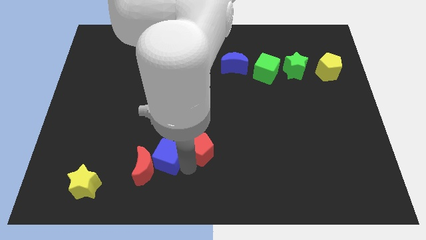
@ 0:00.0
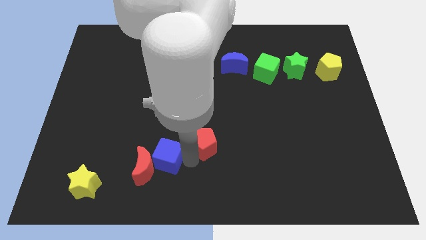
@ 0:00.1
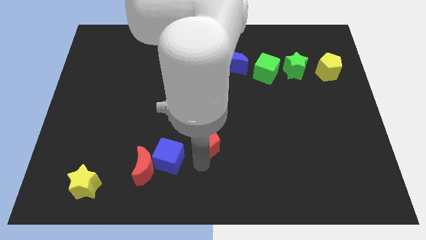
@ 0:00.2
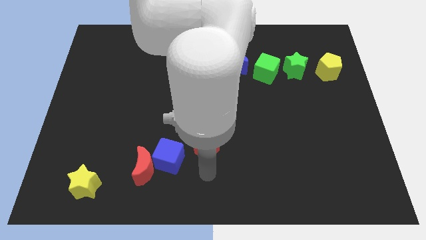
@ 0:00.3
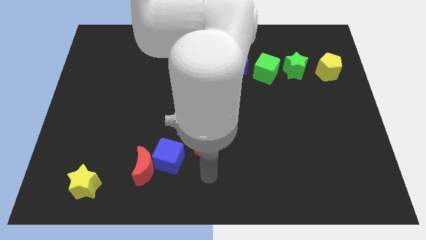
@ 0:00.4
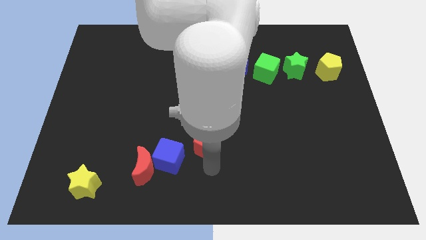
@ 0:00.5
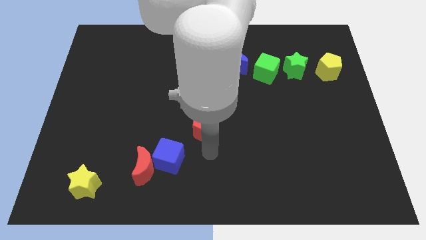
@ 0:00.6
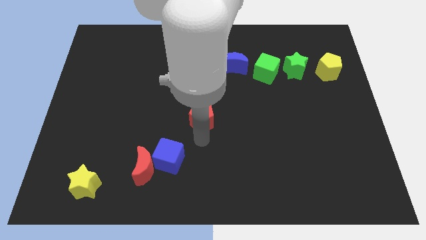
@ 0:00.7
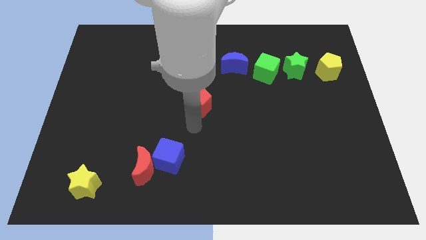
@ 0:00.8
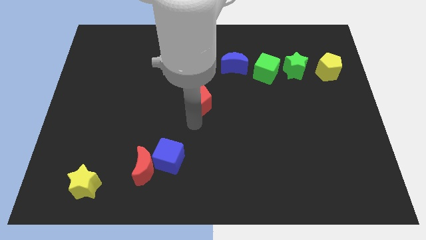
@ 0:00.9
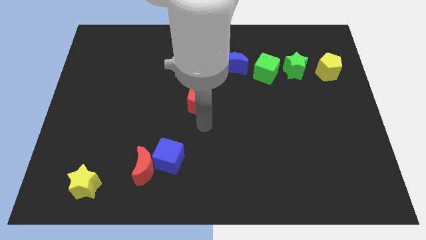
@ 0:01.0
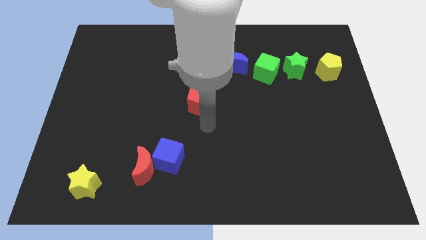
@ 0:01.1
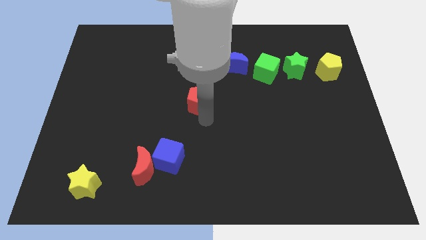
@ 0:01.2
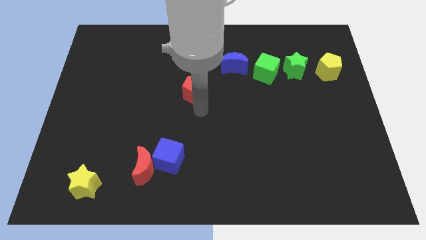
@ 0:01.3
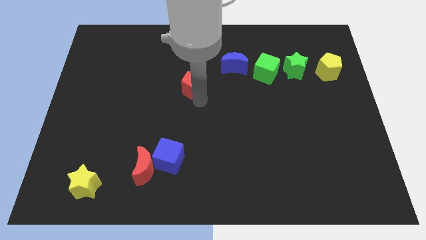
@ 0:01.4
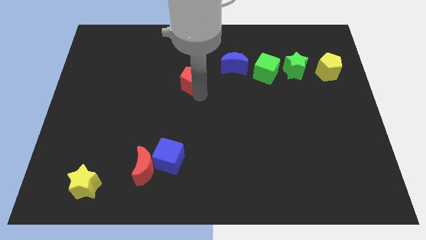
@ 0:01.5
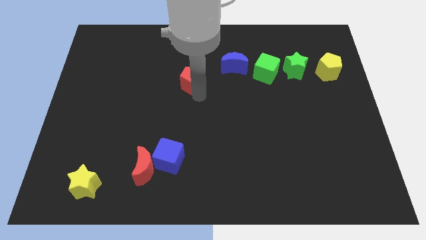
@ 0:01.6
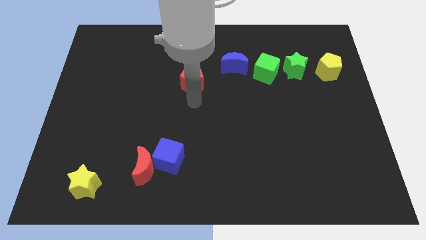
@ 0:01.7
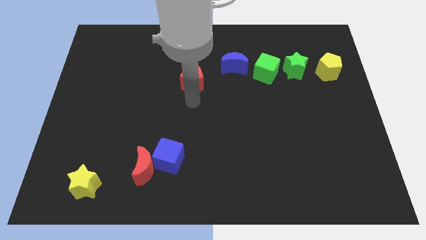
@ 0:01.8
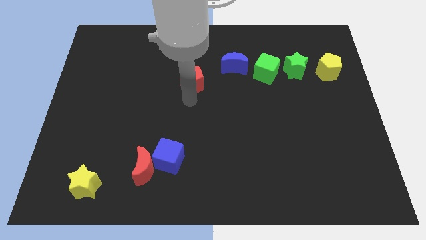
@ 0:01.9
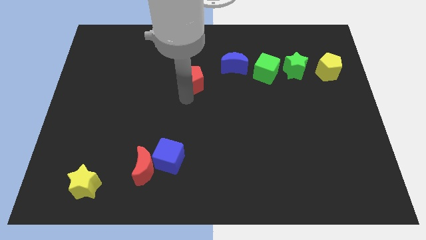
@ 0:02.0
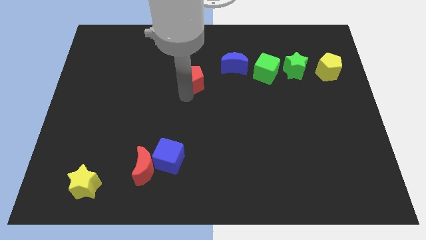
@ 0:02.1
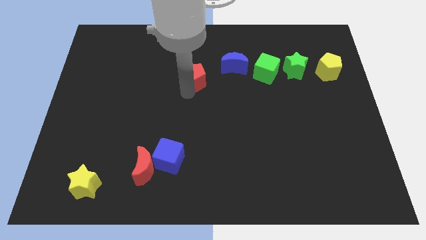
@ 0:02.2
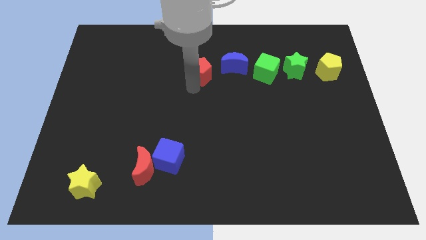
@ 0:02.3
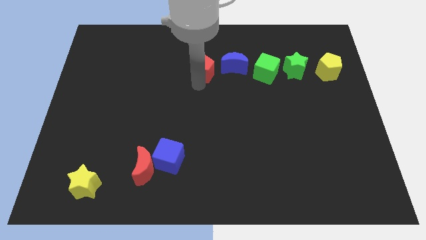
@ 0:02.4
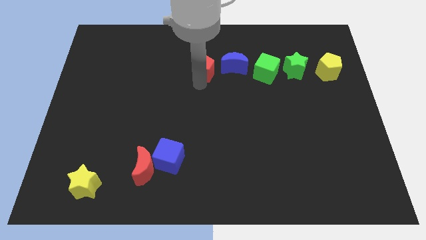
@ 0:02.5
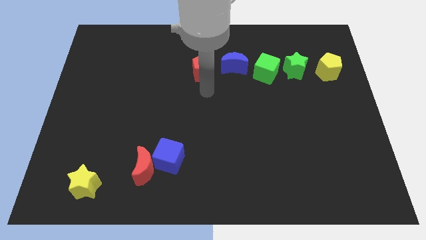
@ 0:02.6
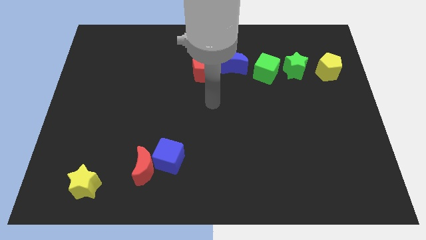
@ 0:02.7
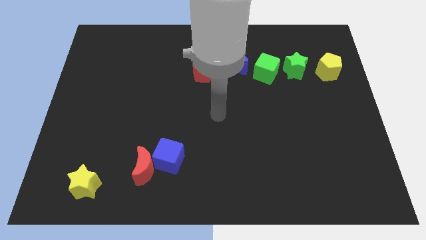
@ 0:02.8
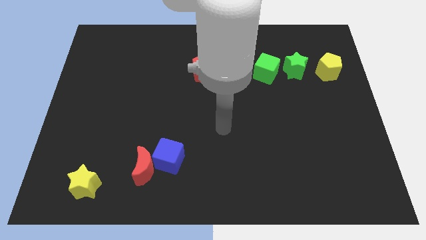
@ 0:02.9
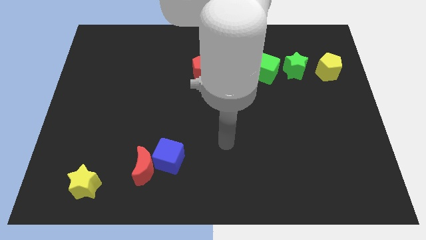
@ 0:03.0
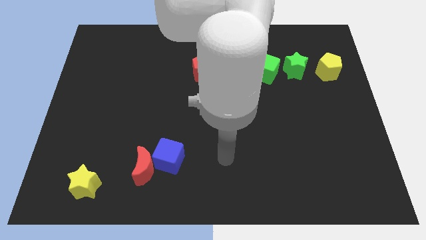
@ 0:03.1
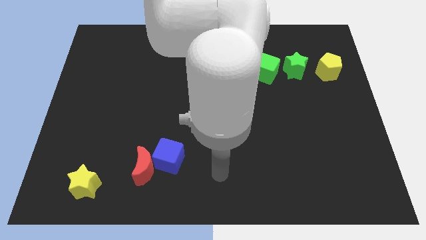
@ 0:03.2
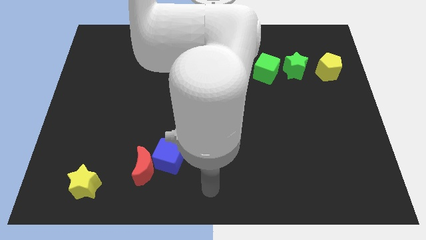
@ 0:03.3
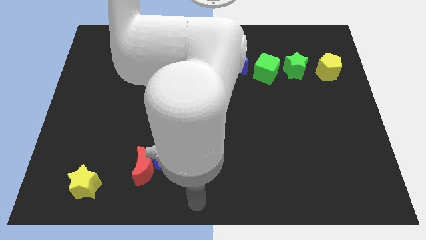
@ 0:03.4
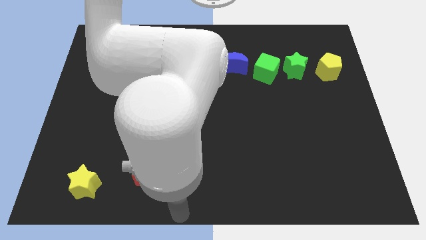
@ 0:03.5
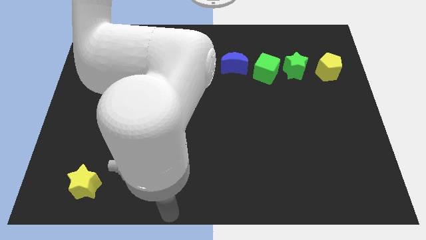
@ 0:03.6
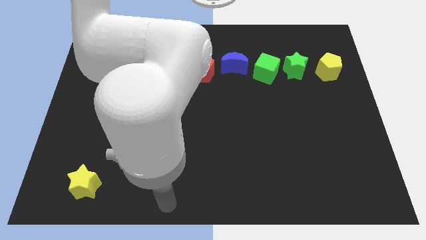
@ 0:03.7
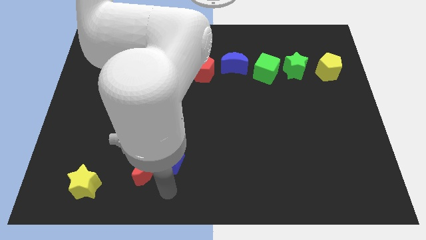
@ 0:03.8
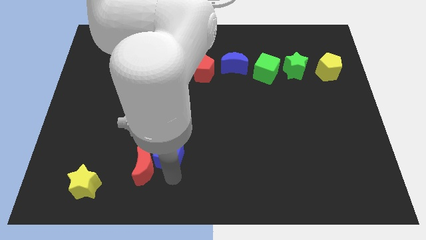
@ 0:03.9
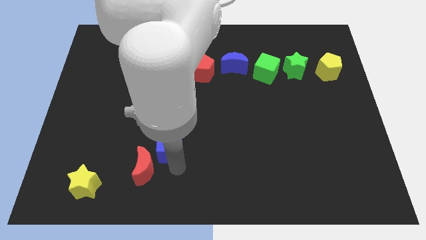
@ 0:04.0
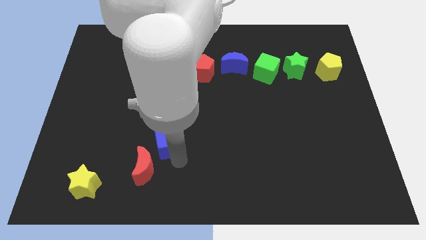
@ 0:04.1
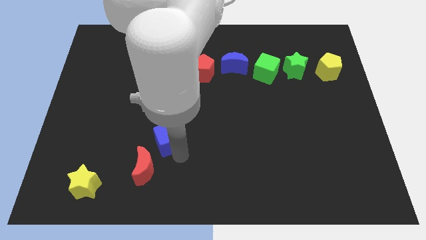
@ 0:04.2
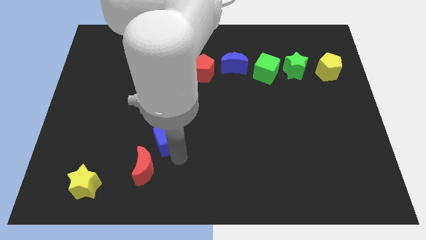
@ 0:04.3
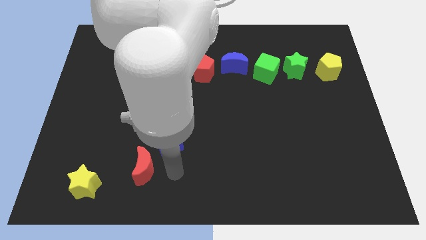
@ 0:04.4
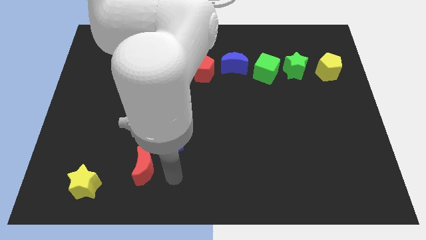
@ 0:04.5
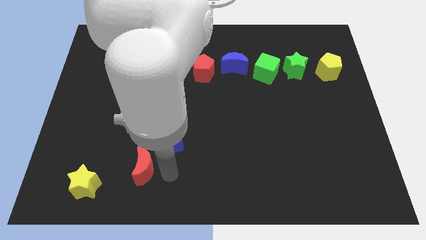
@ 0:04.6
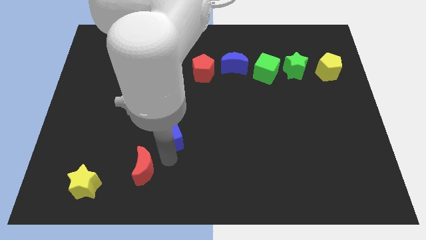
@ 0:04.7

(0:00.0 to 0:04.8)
separate the blue cube from the red moon

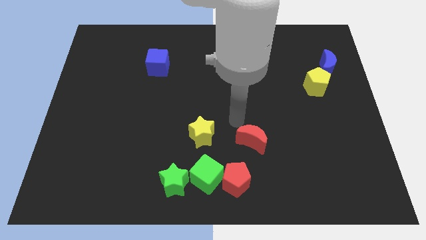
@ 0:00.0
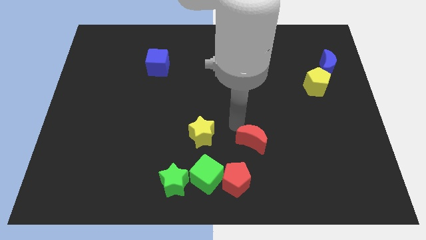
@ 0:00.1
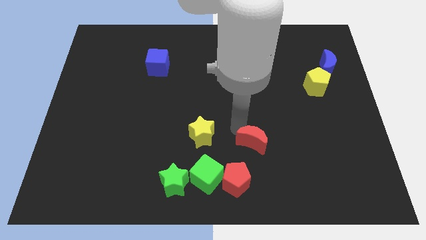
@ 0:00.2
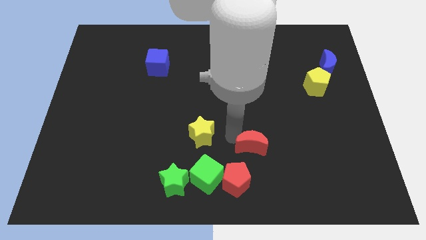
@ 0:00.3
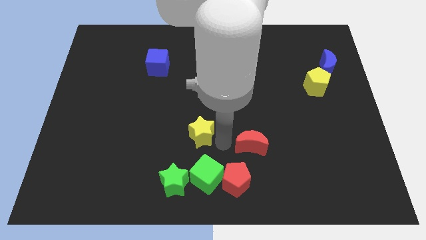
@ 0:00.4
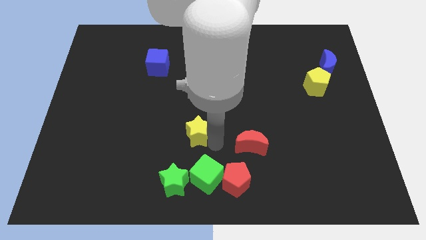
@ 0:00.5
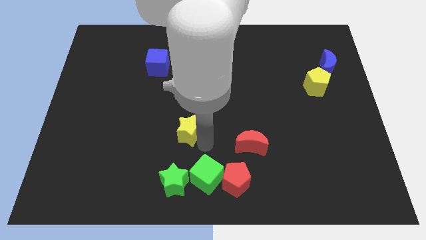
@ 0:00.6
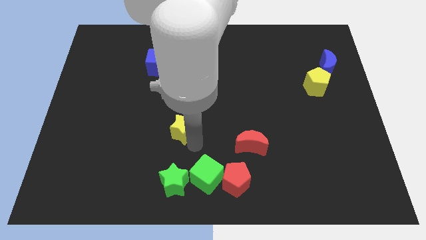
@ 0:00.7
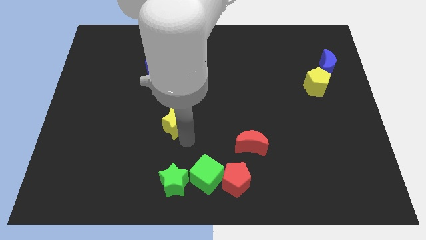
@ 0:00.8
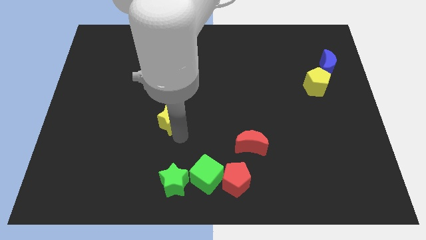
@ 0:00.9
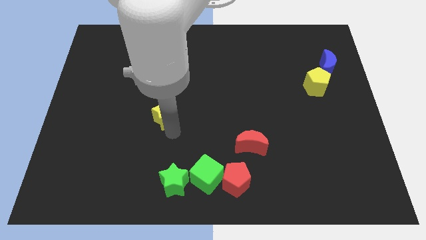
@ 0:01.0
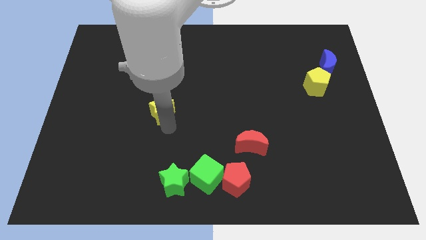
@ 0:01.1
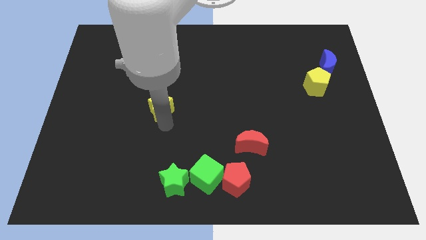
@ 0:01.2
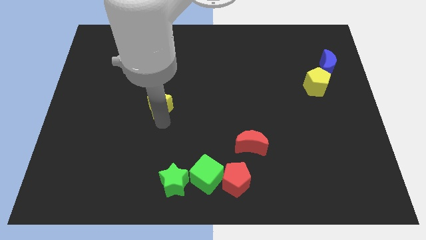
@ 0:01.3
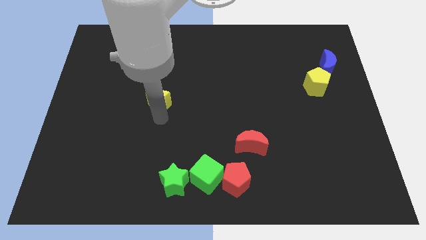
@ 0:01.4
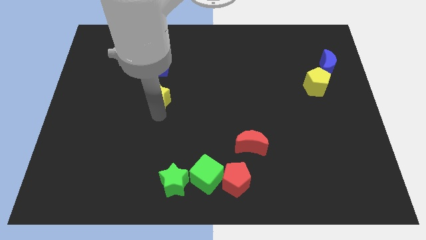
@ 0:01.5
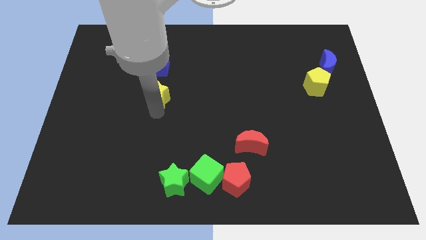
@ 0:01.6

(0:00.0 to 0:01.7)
place the yellow star vertically to the bottom of the blue cube

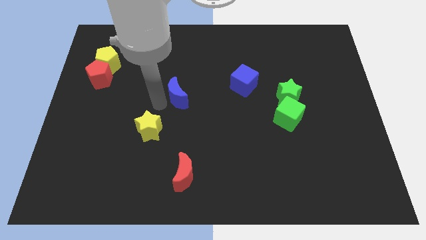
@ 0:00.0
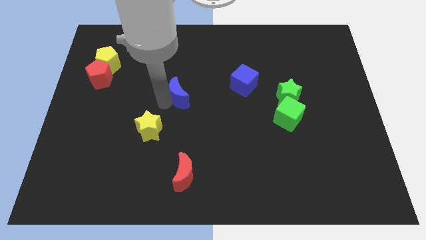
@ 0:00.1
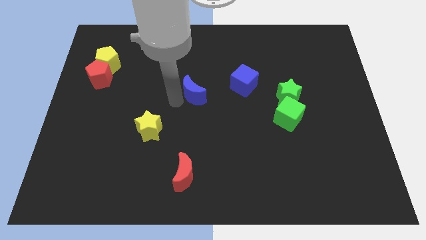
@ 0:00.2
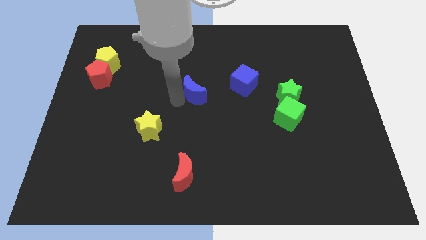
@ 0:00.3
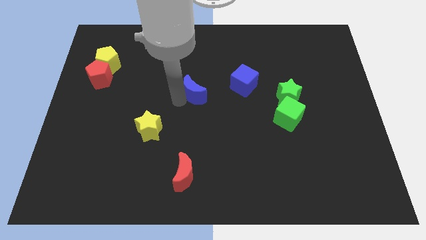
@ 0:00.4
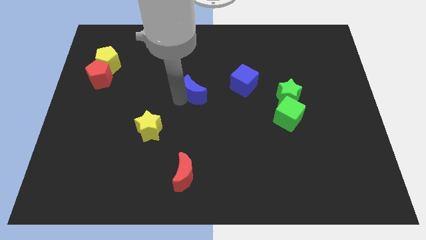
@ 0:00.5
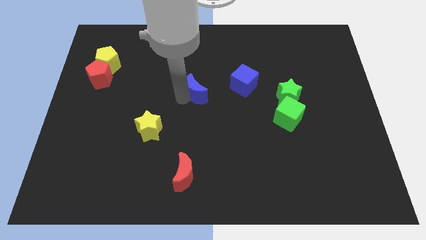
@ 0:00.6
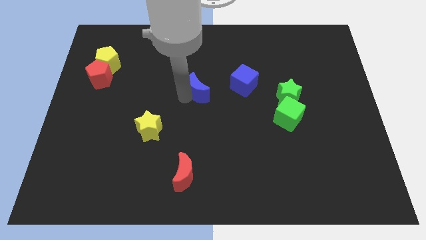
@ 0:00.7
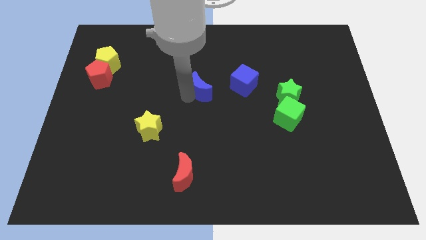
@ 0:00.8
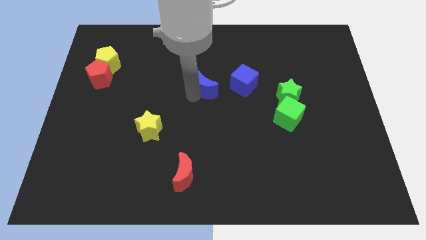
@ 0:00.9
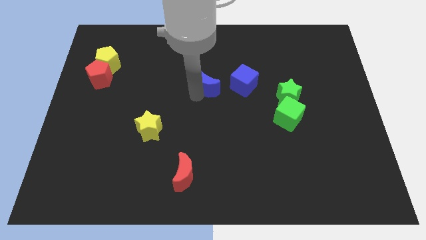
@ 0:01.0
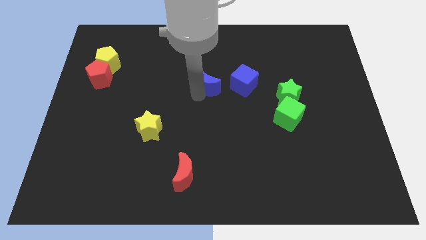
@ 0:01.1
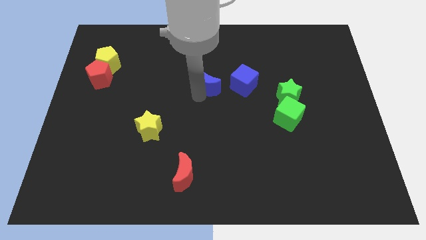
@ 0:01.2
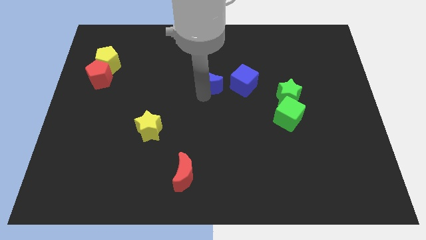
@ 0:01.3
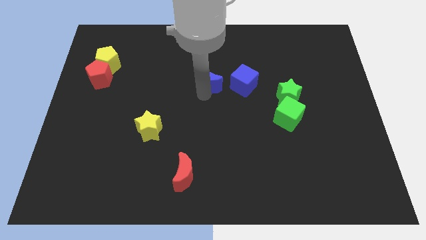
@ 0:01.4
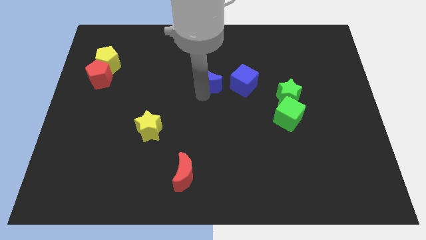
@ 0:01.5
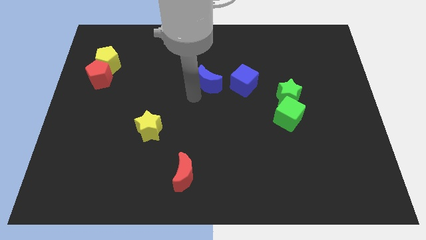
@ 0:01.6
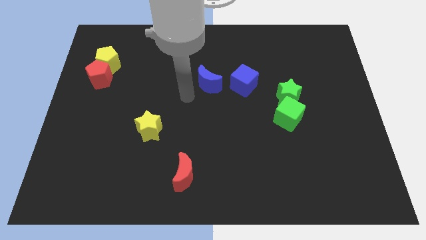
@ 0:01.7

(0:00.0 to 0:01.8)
push the blue moon to the left of the blue cube

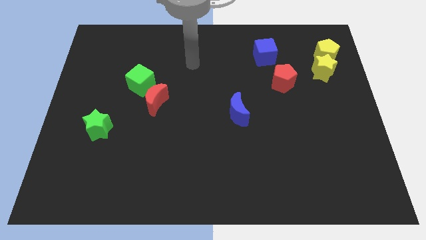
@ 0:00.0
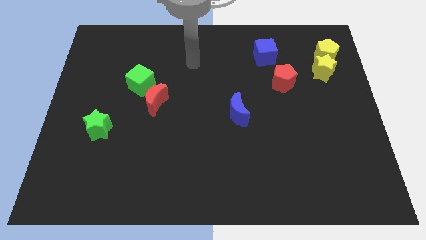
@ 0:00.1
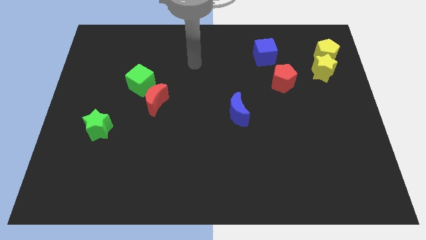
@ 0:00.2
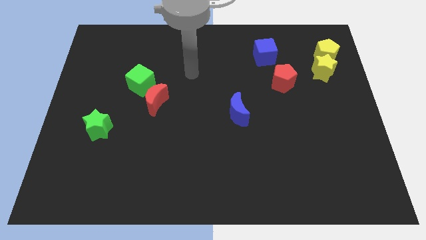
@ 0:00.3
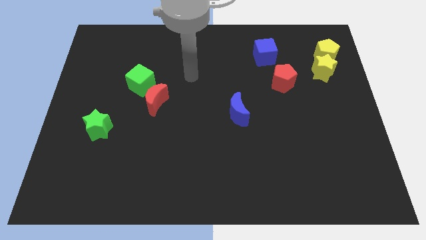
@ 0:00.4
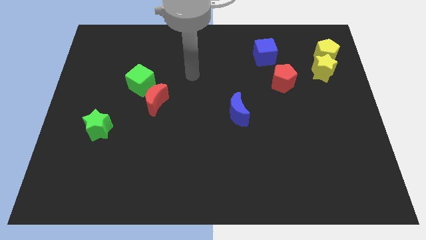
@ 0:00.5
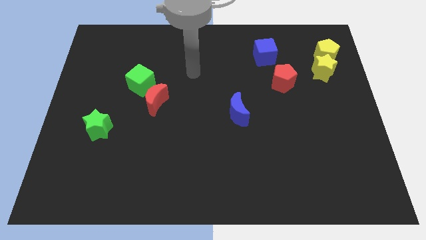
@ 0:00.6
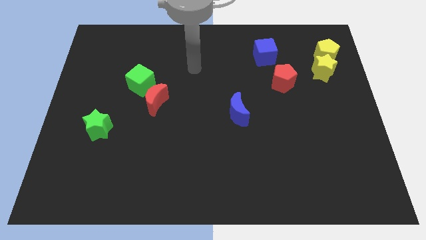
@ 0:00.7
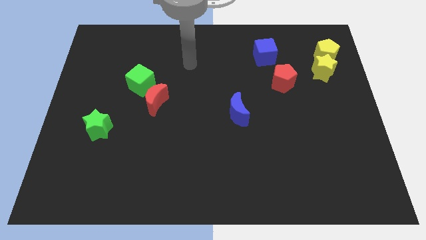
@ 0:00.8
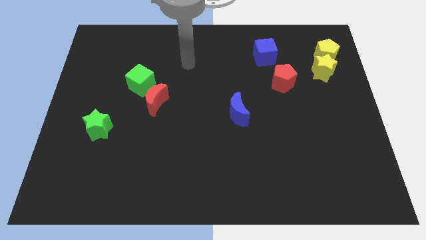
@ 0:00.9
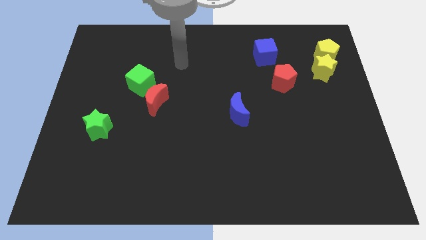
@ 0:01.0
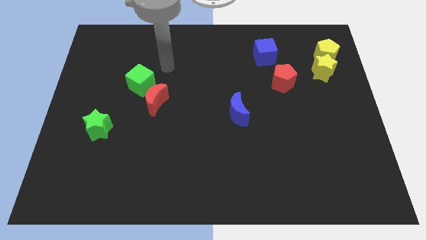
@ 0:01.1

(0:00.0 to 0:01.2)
place the pointer at the top of the red moon
